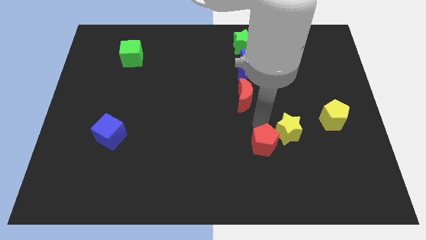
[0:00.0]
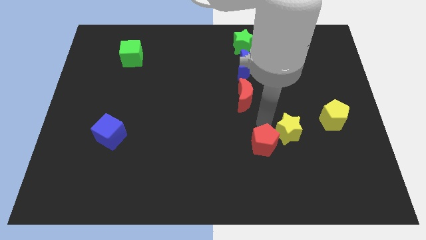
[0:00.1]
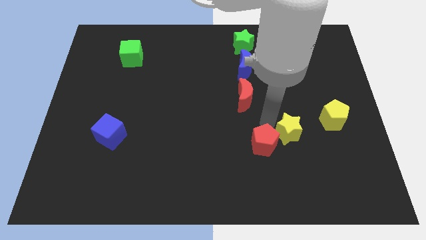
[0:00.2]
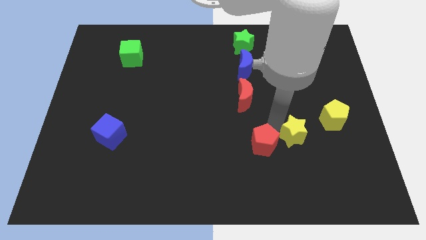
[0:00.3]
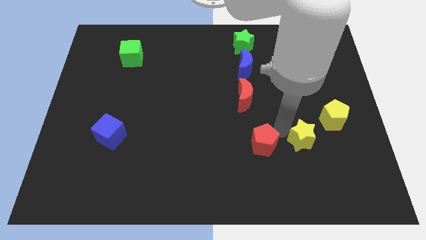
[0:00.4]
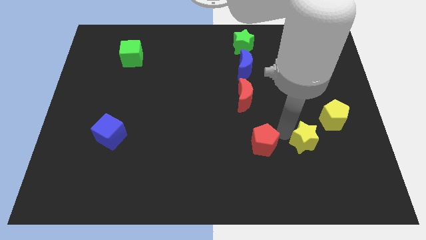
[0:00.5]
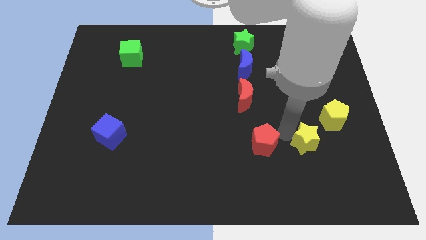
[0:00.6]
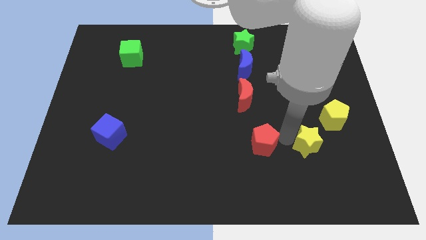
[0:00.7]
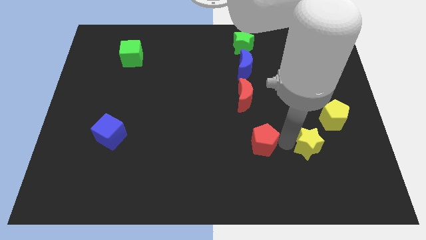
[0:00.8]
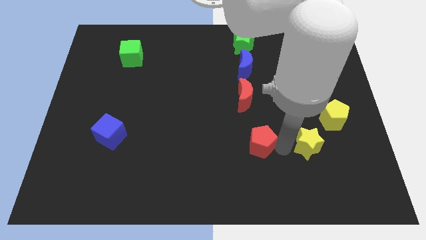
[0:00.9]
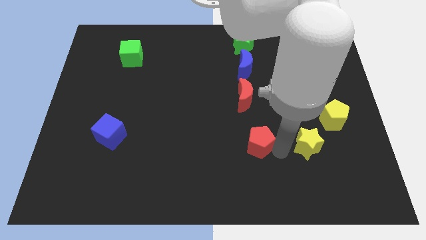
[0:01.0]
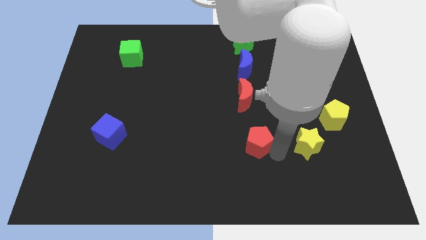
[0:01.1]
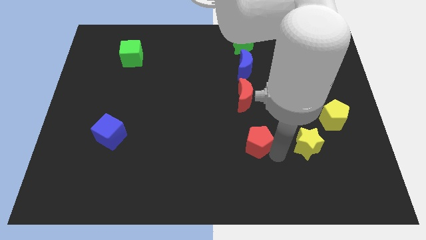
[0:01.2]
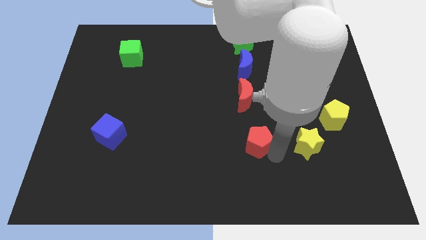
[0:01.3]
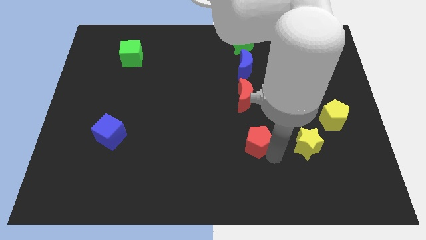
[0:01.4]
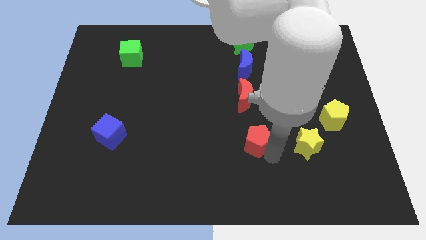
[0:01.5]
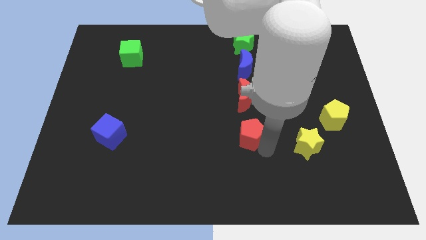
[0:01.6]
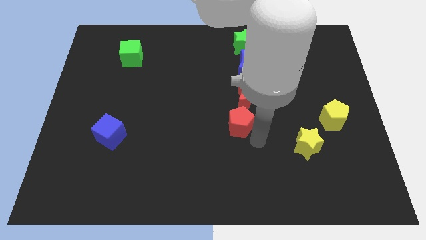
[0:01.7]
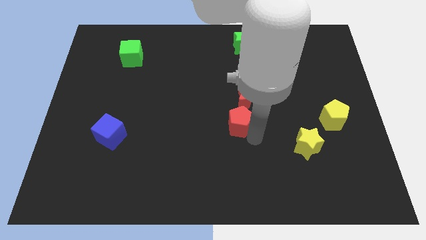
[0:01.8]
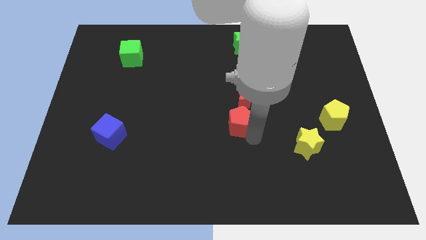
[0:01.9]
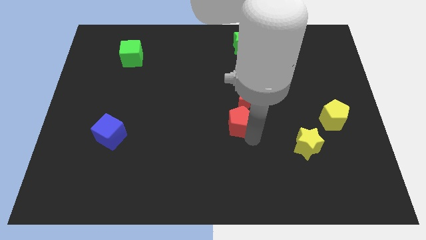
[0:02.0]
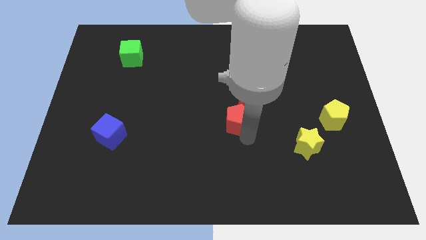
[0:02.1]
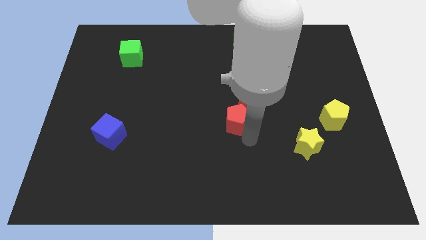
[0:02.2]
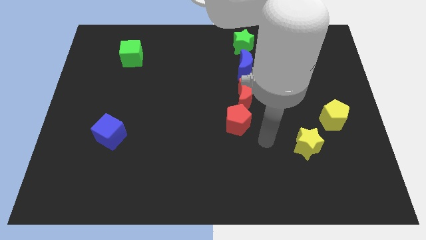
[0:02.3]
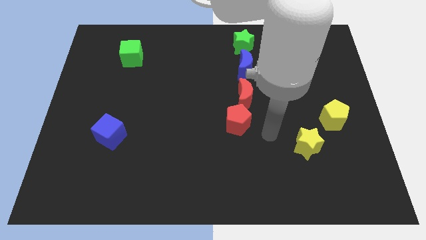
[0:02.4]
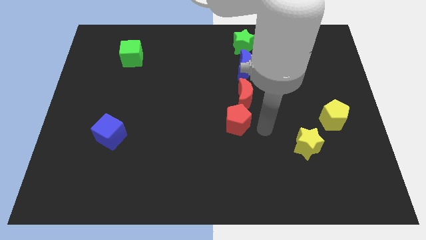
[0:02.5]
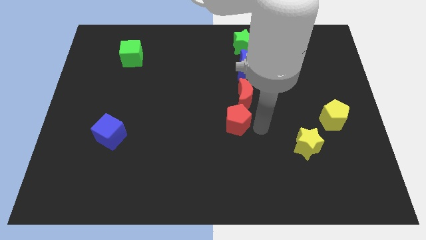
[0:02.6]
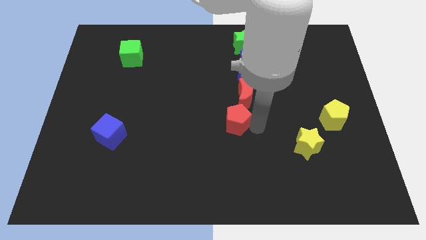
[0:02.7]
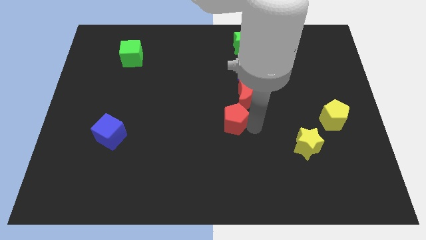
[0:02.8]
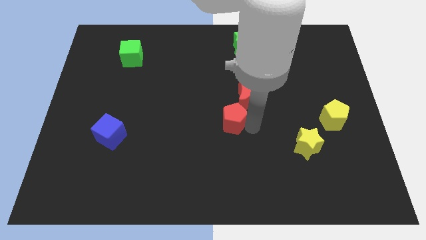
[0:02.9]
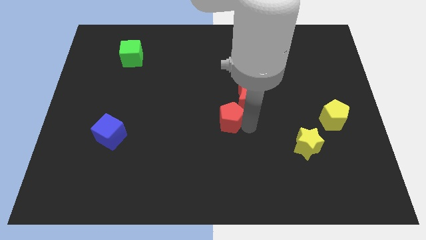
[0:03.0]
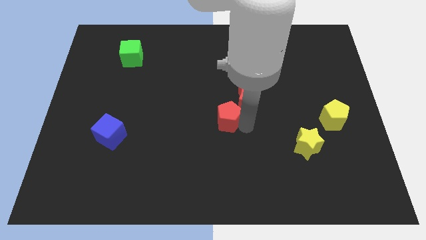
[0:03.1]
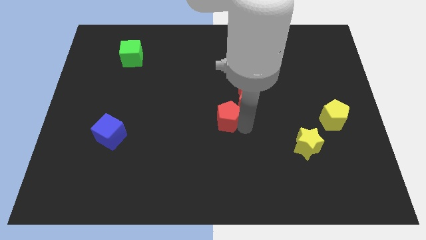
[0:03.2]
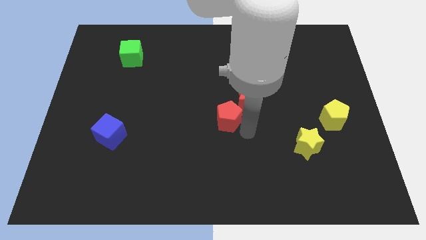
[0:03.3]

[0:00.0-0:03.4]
place the red pentagon diagonal to the yellow star

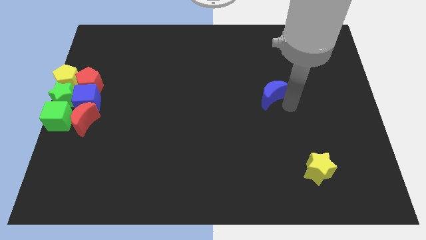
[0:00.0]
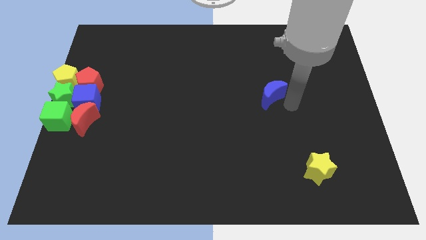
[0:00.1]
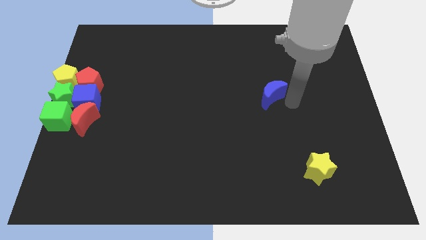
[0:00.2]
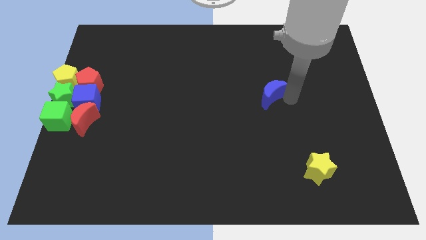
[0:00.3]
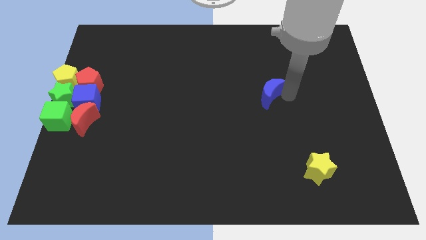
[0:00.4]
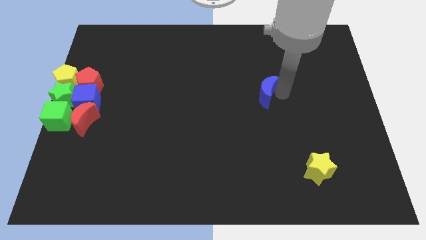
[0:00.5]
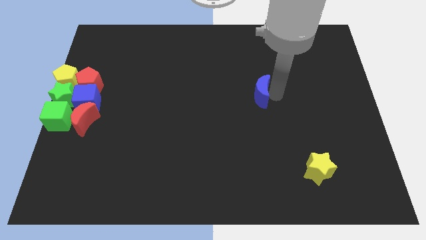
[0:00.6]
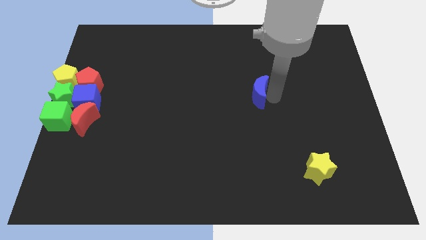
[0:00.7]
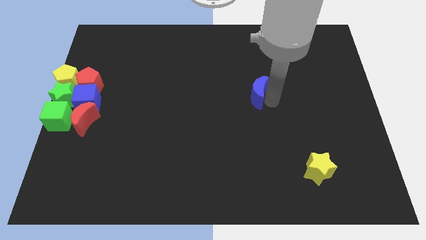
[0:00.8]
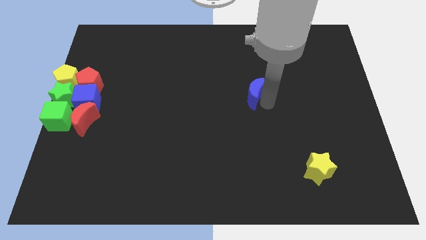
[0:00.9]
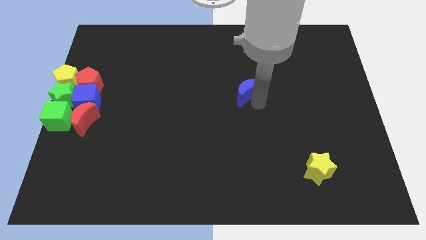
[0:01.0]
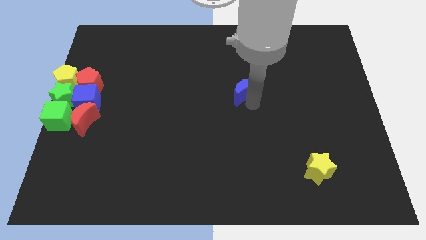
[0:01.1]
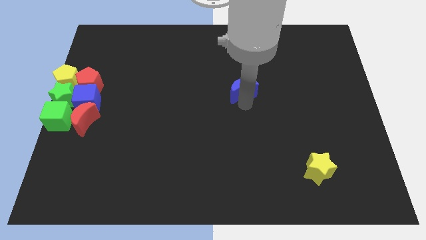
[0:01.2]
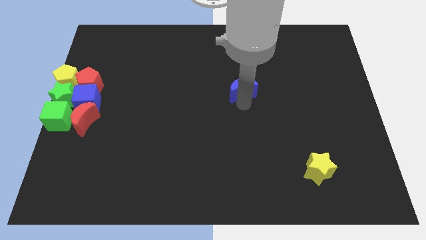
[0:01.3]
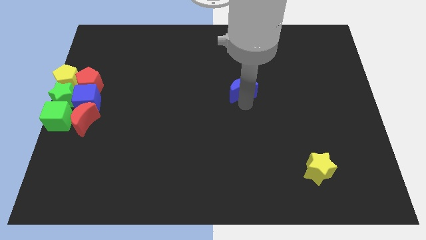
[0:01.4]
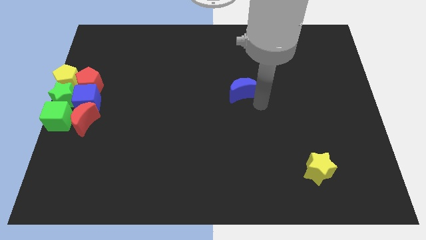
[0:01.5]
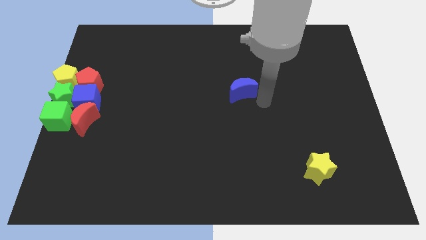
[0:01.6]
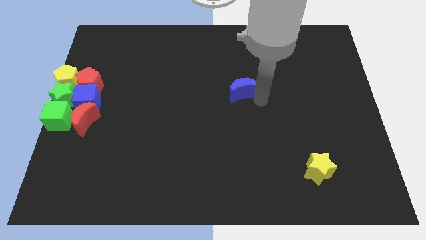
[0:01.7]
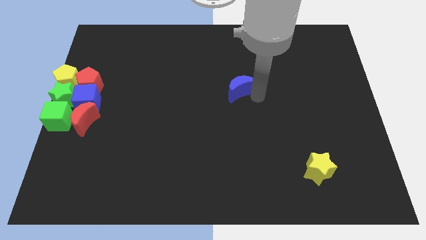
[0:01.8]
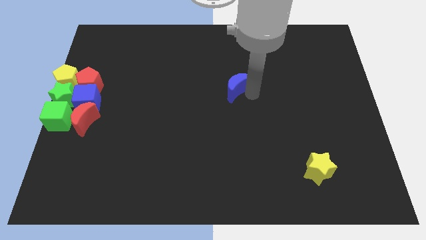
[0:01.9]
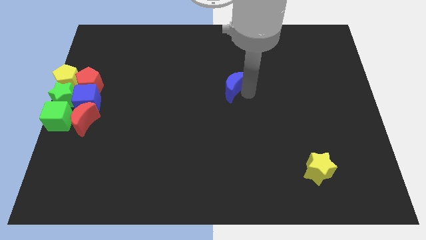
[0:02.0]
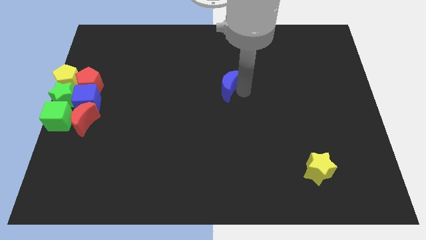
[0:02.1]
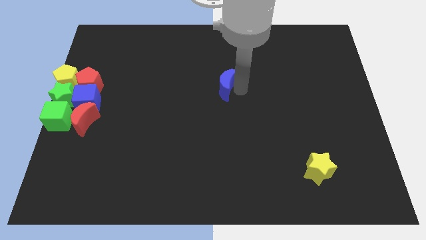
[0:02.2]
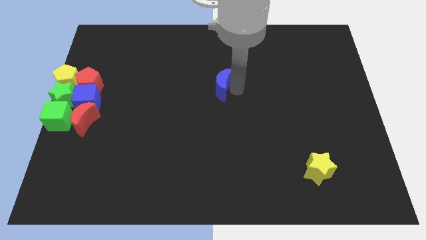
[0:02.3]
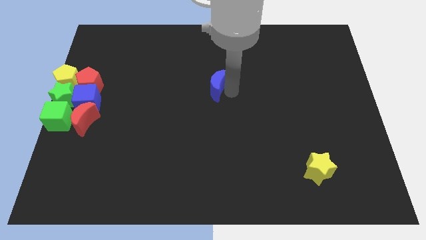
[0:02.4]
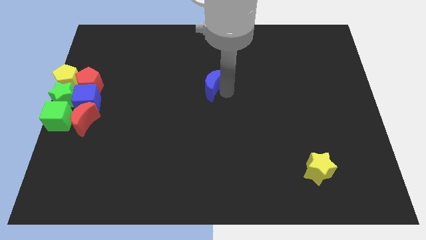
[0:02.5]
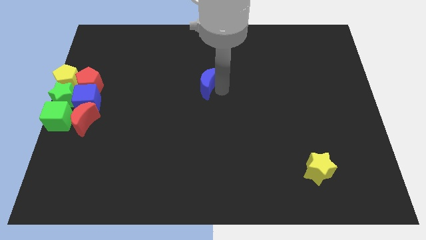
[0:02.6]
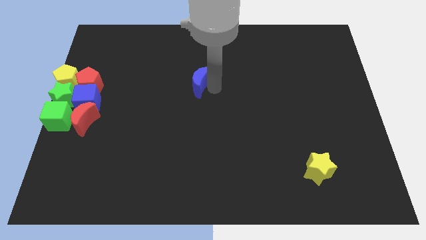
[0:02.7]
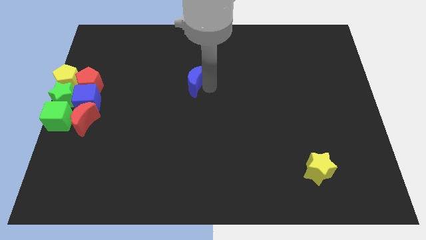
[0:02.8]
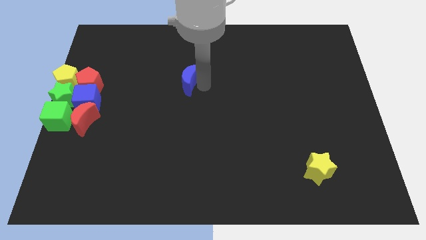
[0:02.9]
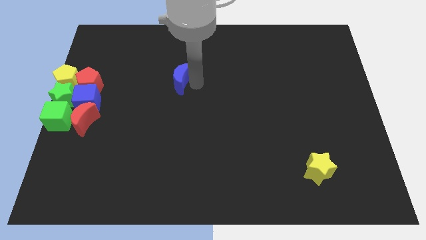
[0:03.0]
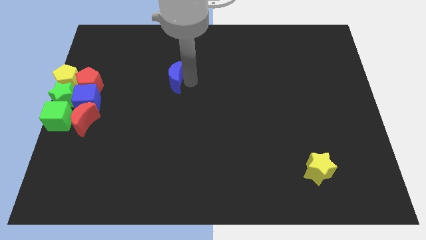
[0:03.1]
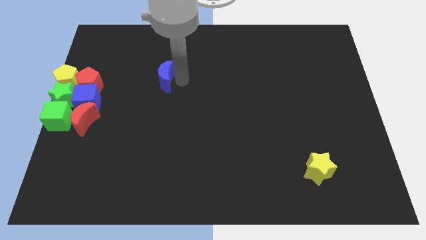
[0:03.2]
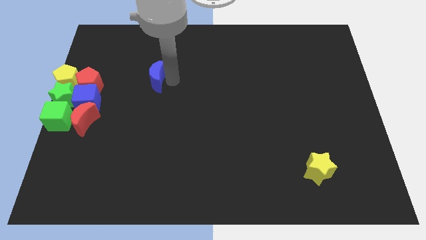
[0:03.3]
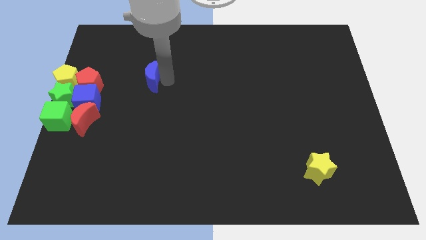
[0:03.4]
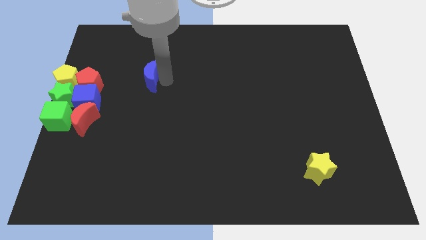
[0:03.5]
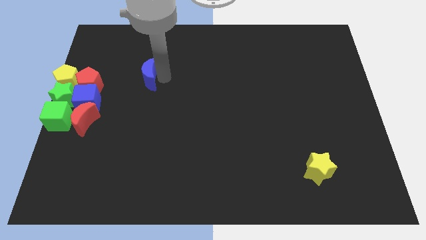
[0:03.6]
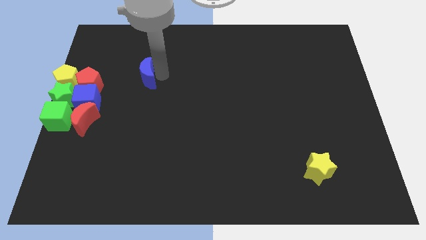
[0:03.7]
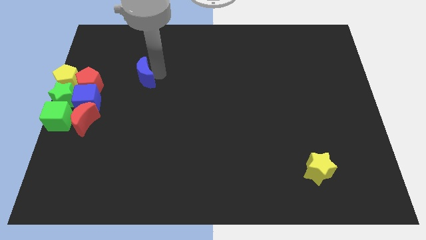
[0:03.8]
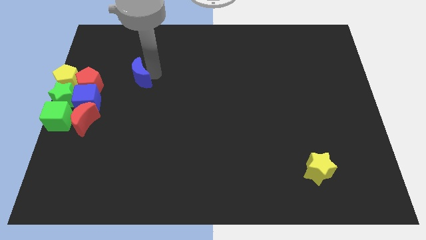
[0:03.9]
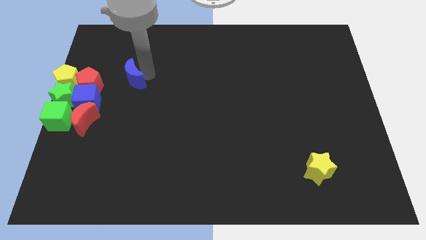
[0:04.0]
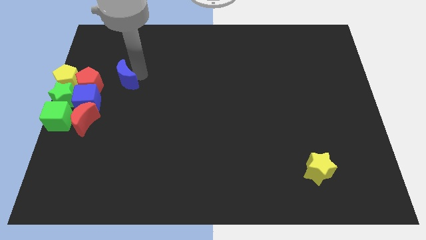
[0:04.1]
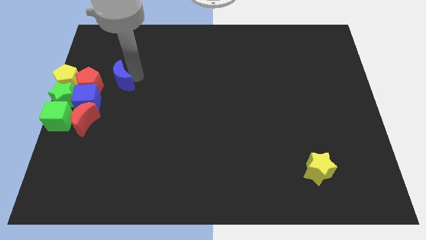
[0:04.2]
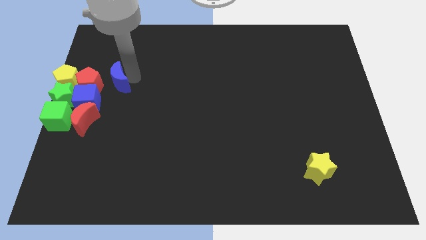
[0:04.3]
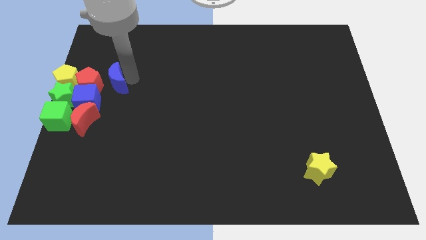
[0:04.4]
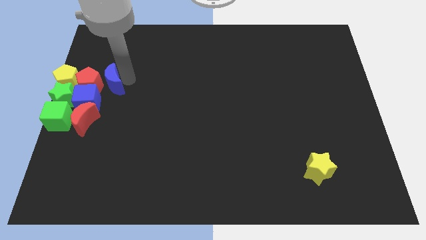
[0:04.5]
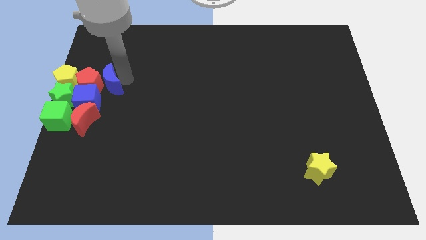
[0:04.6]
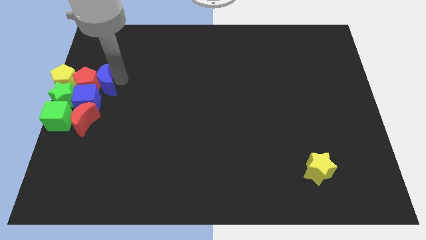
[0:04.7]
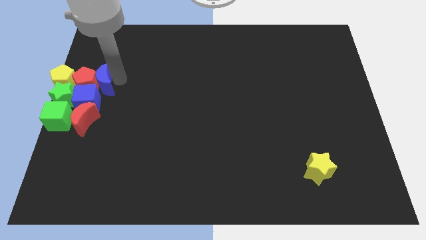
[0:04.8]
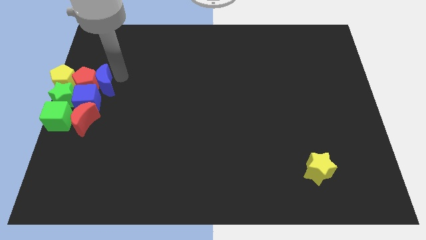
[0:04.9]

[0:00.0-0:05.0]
move the blue moon right to the red pentagon

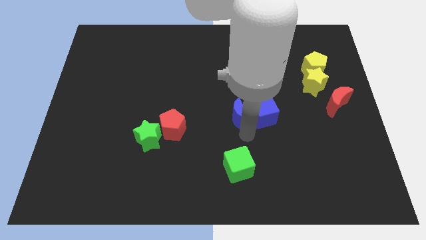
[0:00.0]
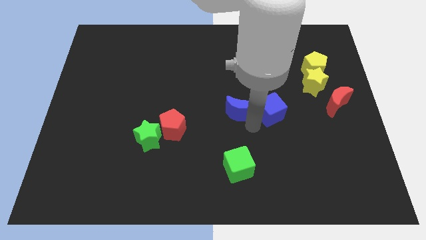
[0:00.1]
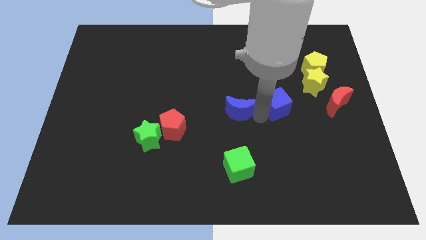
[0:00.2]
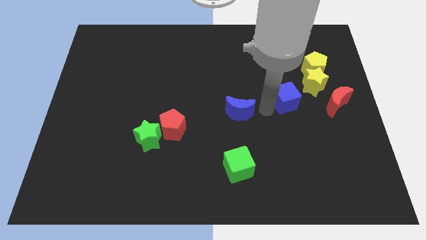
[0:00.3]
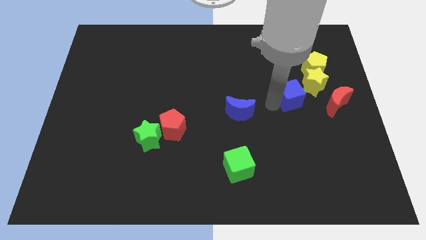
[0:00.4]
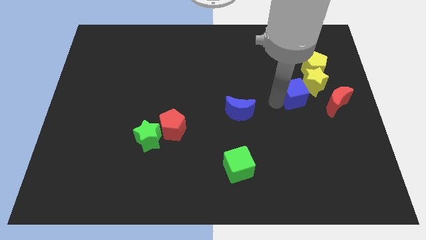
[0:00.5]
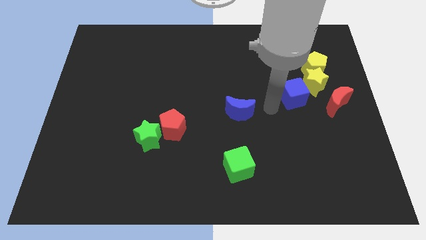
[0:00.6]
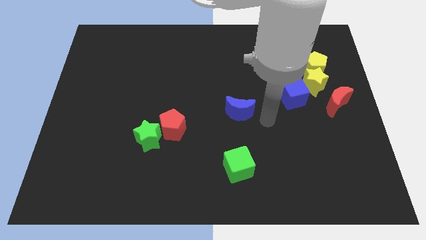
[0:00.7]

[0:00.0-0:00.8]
place the blue cube diagonally to the left of the yellow star
